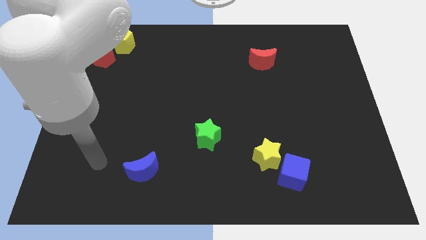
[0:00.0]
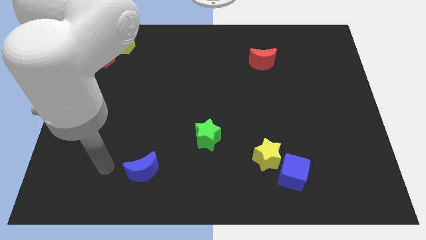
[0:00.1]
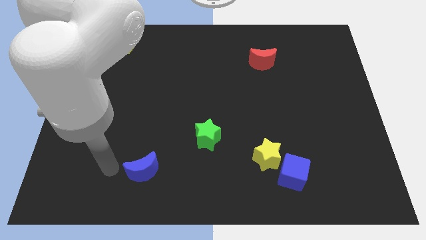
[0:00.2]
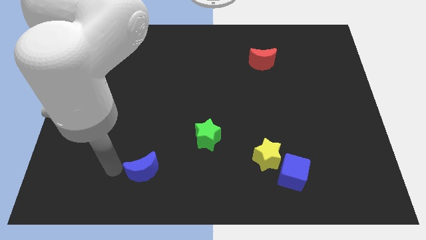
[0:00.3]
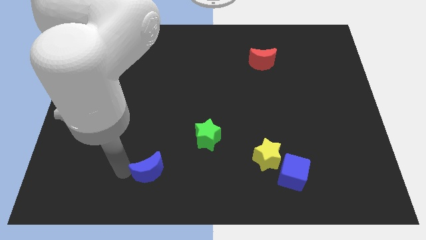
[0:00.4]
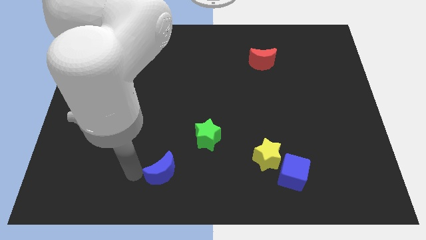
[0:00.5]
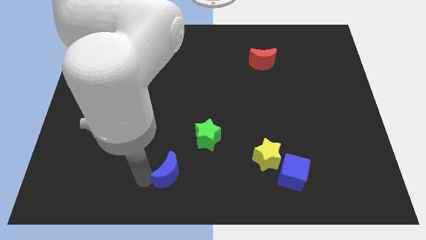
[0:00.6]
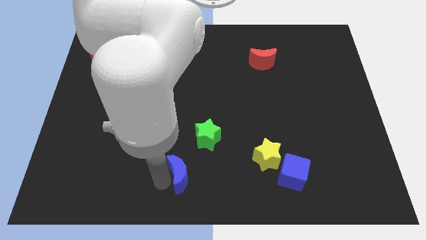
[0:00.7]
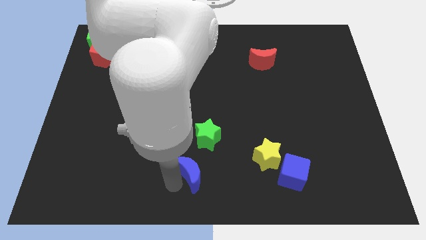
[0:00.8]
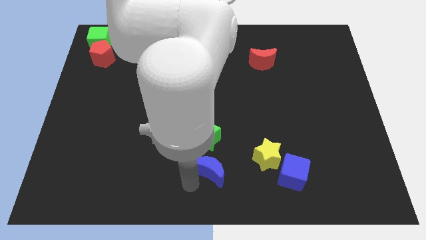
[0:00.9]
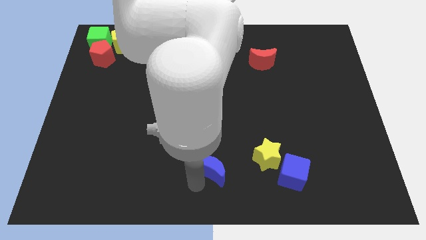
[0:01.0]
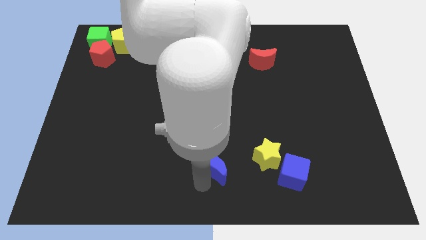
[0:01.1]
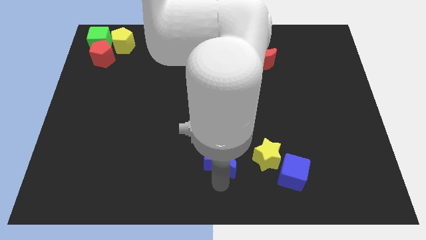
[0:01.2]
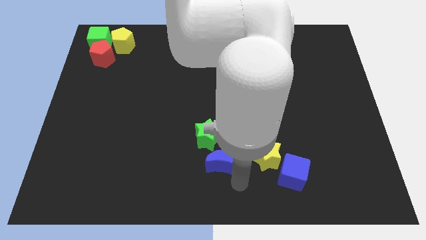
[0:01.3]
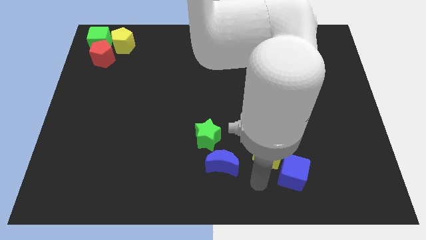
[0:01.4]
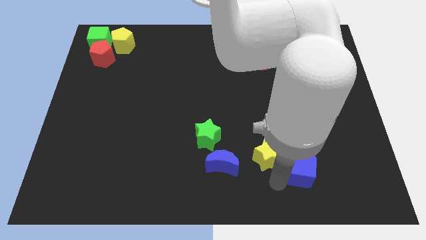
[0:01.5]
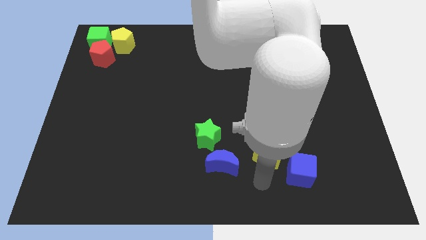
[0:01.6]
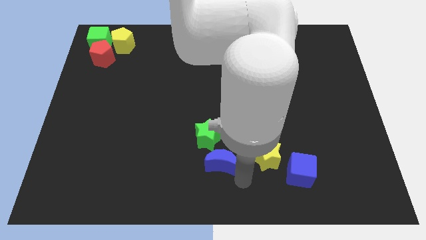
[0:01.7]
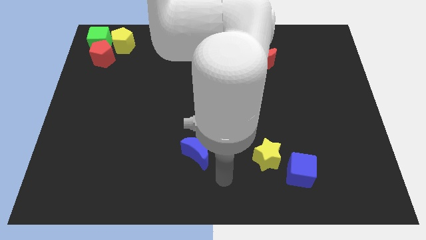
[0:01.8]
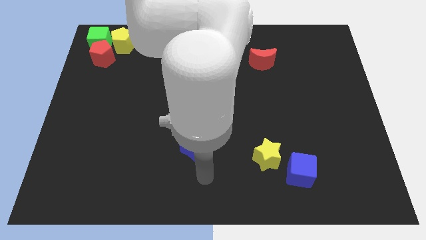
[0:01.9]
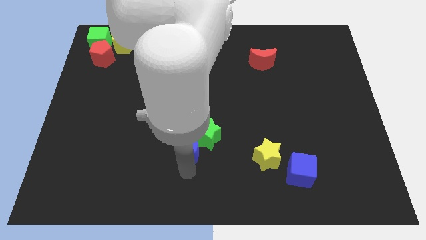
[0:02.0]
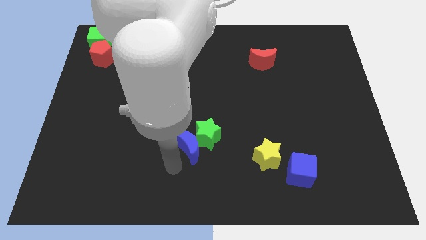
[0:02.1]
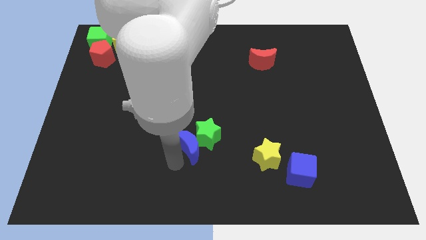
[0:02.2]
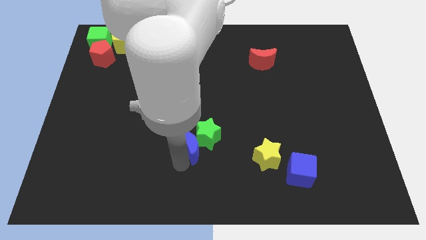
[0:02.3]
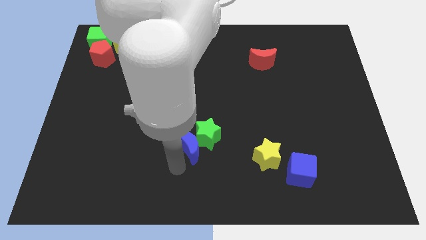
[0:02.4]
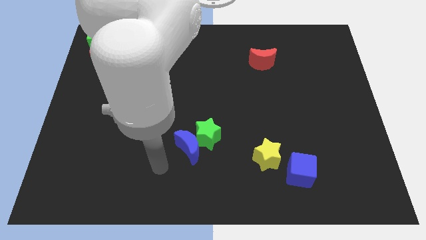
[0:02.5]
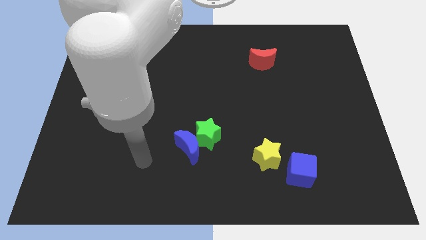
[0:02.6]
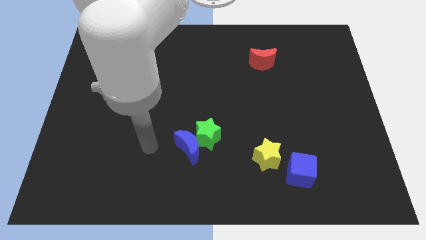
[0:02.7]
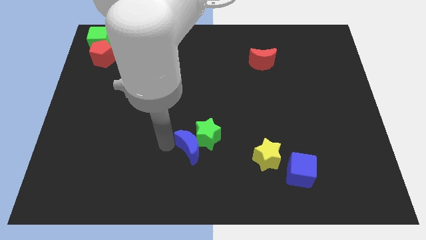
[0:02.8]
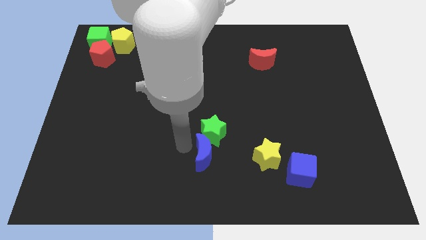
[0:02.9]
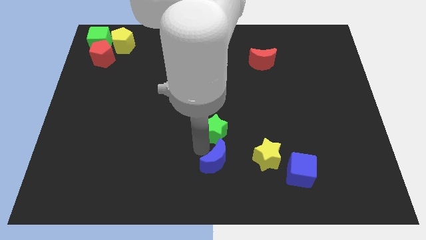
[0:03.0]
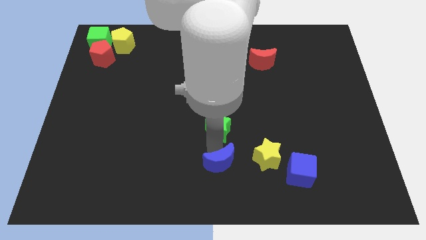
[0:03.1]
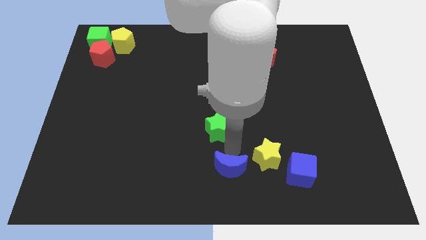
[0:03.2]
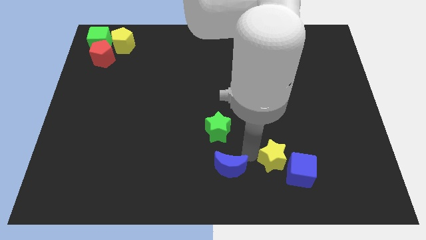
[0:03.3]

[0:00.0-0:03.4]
move the blue crescent left to the yellow star

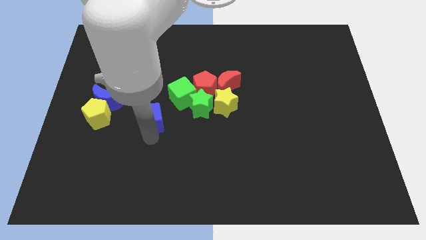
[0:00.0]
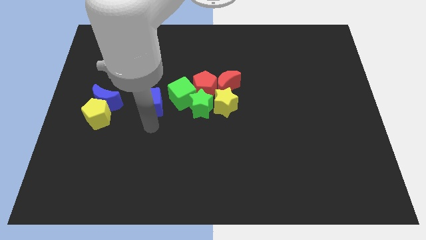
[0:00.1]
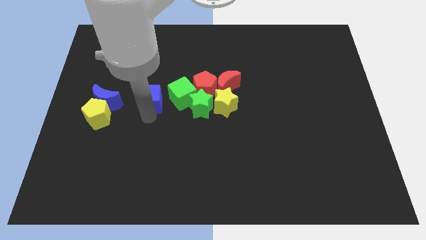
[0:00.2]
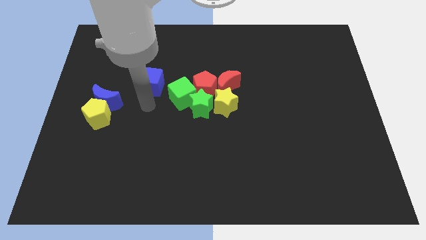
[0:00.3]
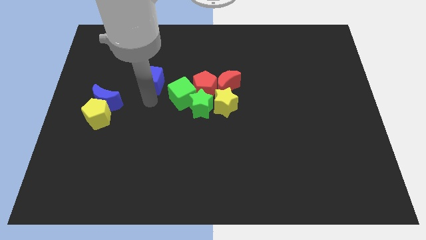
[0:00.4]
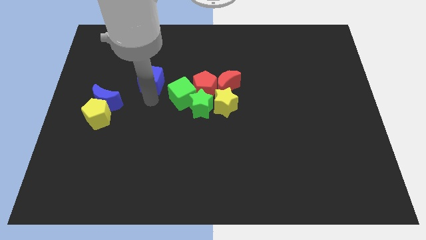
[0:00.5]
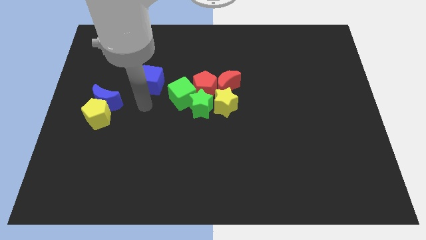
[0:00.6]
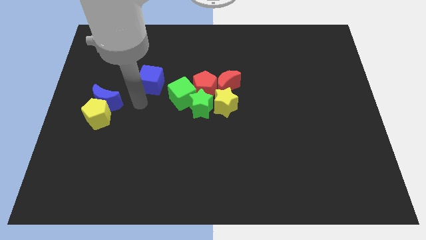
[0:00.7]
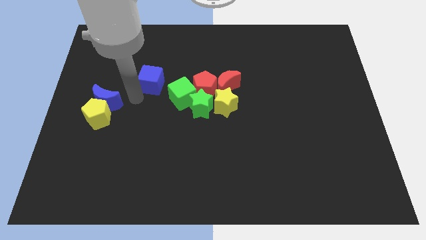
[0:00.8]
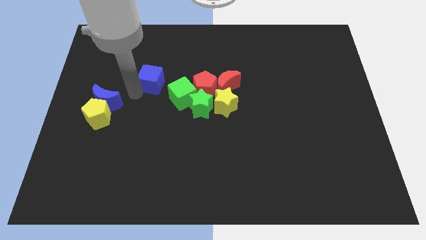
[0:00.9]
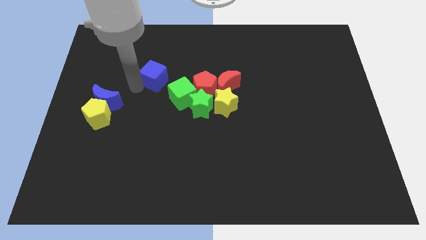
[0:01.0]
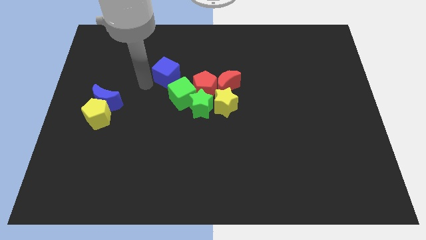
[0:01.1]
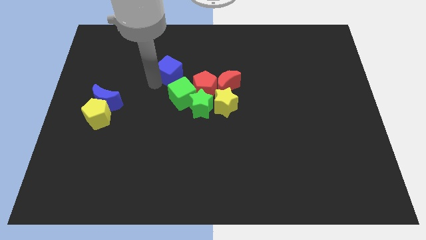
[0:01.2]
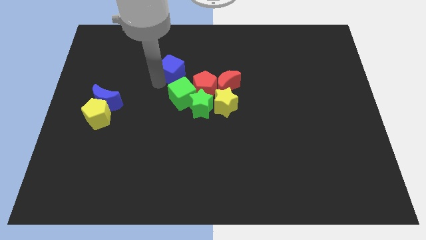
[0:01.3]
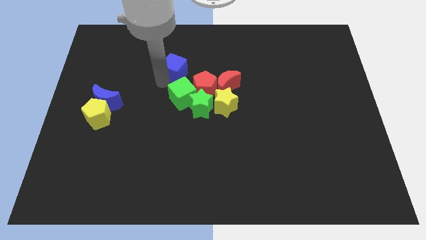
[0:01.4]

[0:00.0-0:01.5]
move the blue cube to the top of the green cube

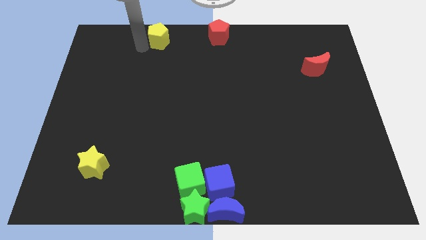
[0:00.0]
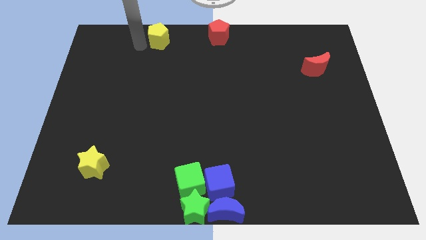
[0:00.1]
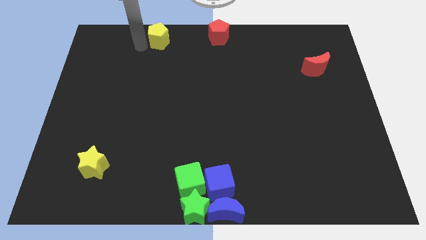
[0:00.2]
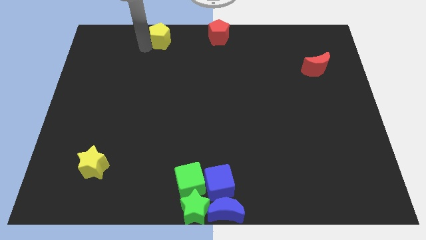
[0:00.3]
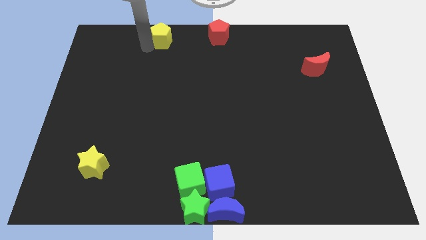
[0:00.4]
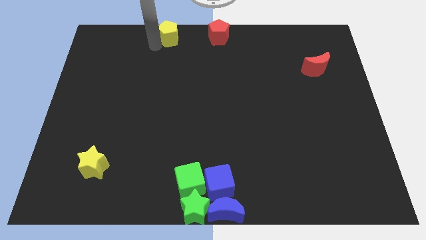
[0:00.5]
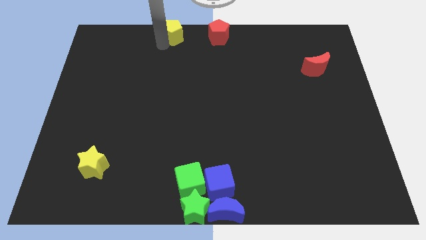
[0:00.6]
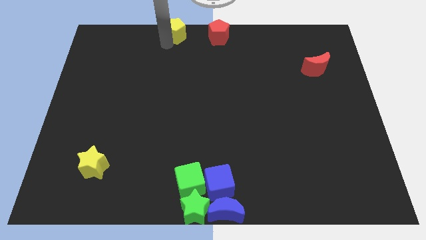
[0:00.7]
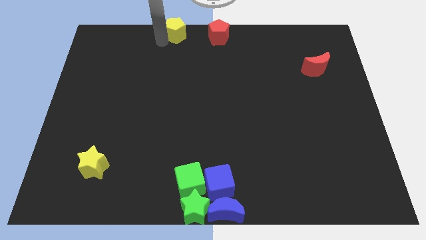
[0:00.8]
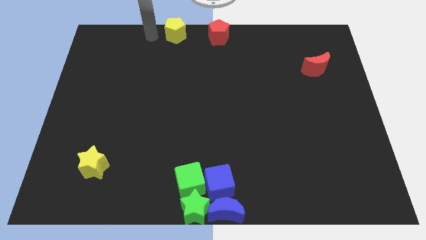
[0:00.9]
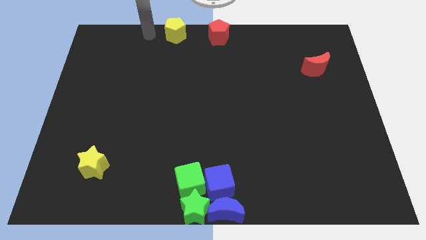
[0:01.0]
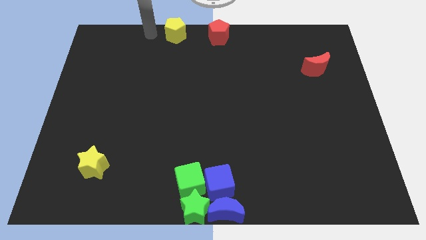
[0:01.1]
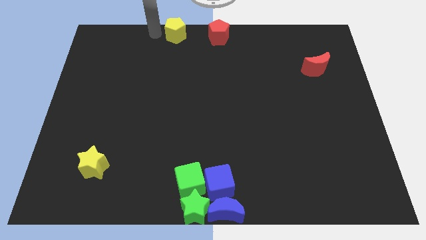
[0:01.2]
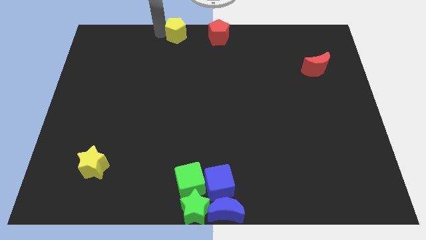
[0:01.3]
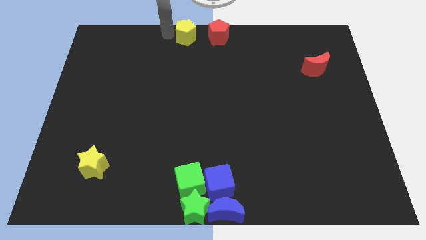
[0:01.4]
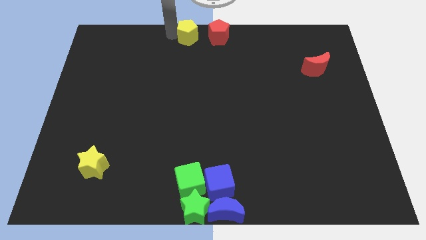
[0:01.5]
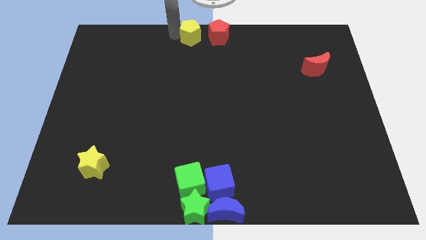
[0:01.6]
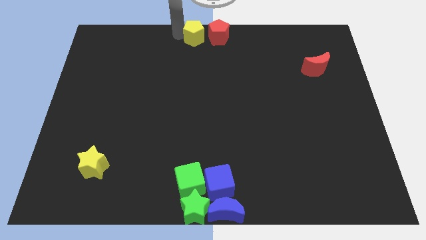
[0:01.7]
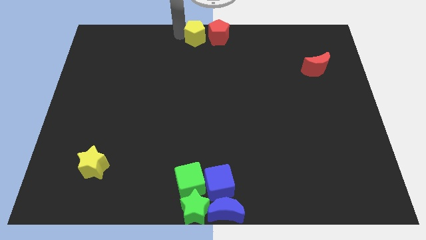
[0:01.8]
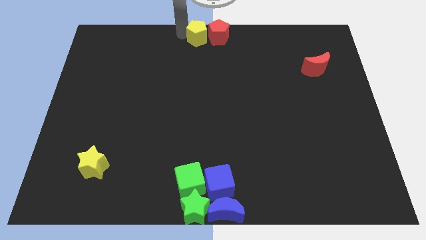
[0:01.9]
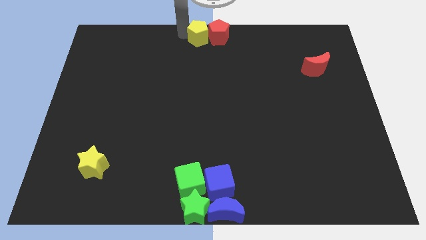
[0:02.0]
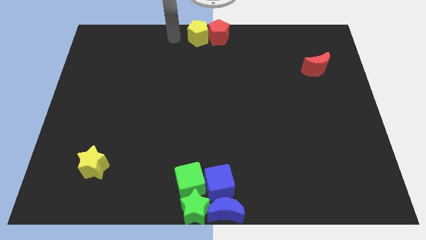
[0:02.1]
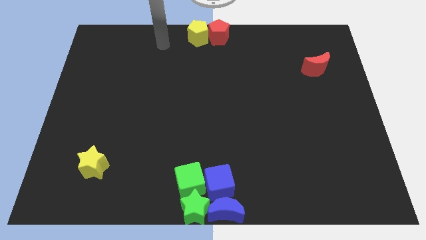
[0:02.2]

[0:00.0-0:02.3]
push the yellow pentagon into the red pentagon to the left

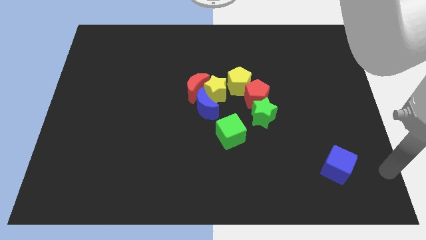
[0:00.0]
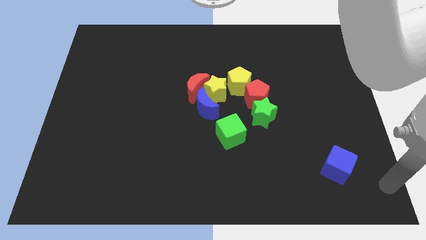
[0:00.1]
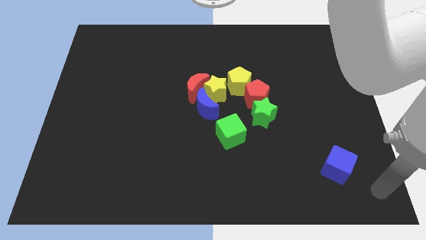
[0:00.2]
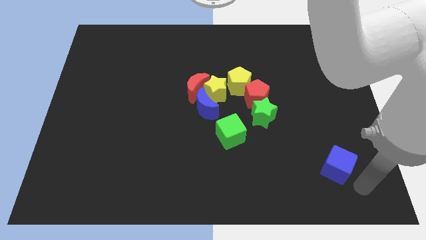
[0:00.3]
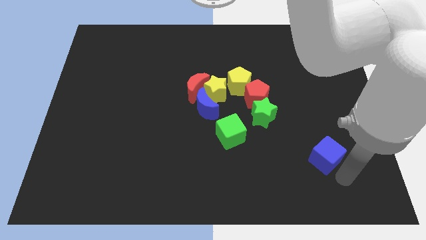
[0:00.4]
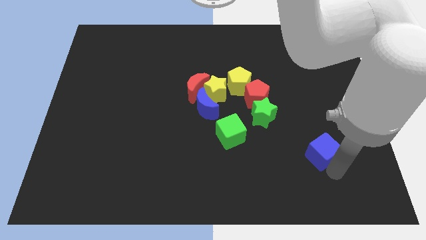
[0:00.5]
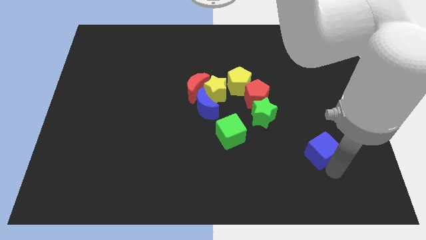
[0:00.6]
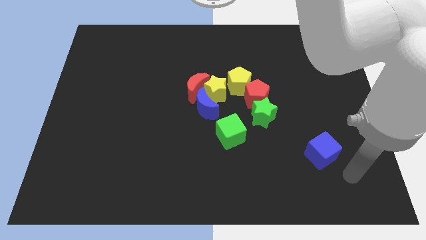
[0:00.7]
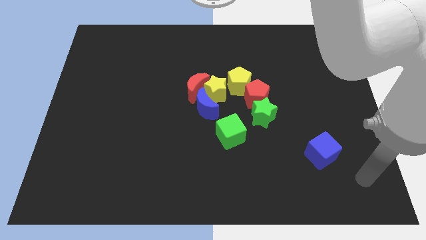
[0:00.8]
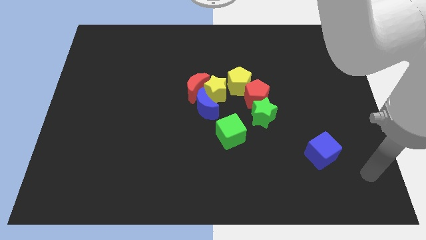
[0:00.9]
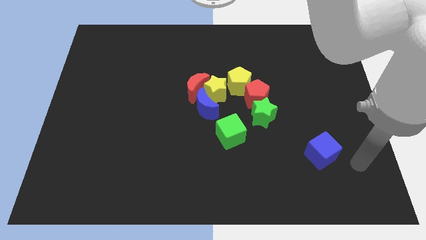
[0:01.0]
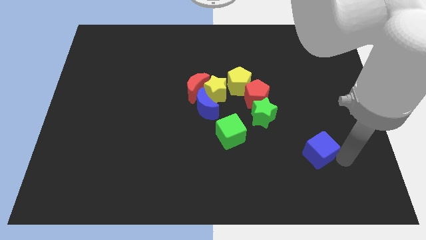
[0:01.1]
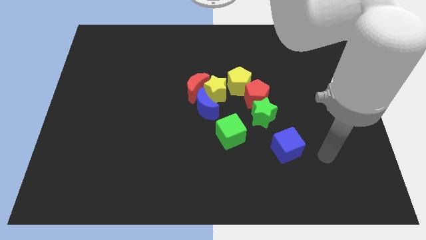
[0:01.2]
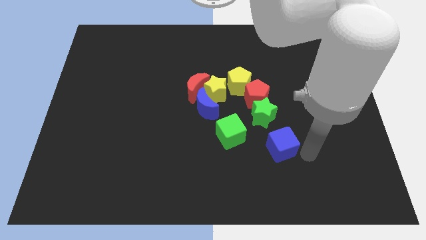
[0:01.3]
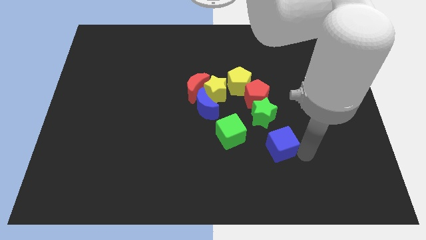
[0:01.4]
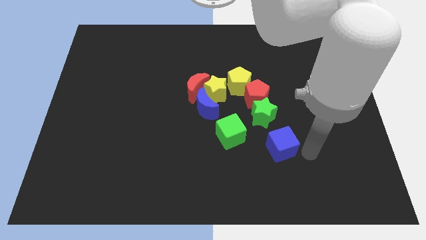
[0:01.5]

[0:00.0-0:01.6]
slide the blue cube towards the green star
